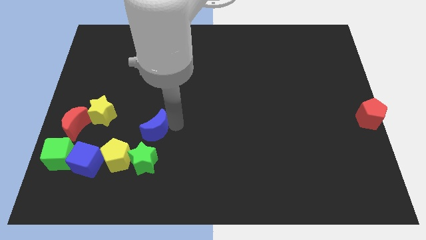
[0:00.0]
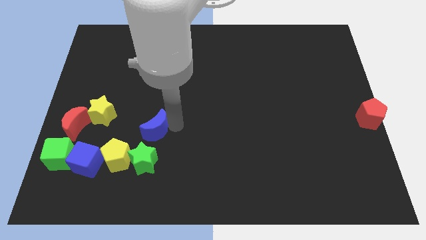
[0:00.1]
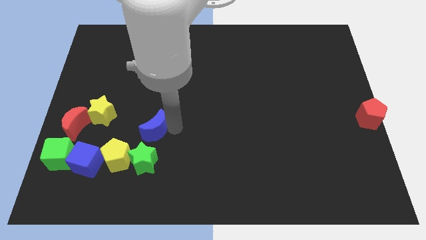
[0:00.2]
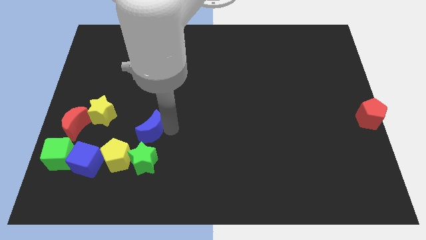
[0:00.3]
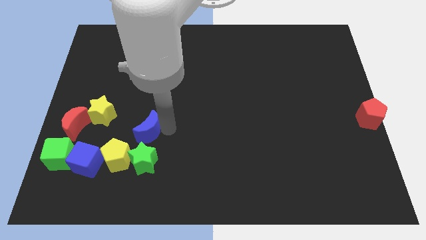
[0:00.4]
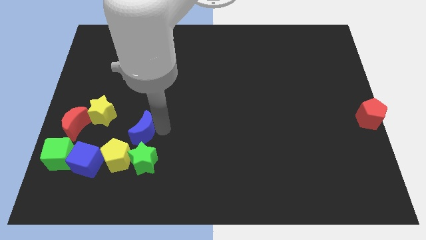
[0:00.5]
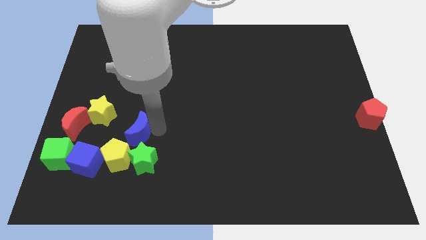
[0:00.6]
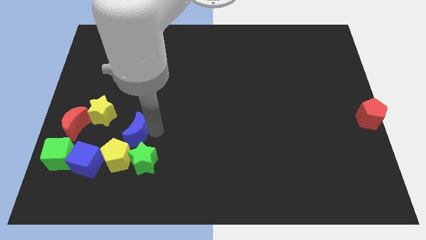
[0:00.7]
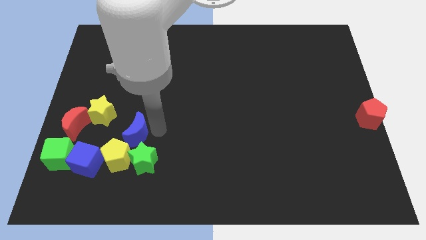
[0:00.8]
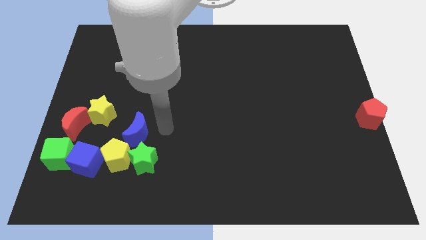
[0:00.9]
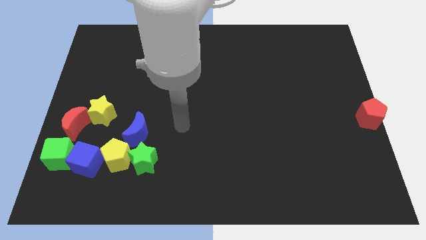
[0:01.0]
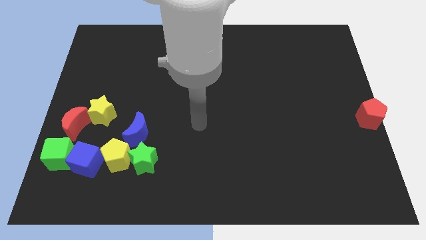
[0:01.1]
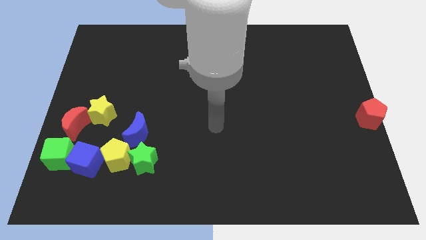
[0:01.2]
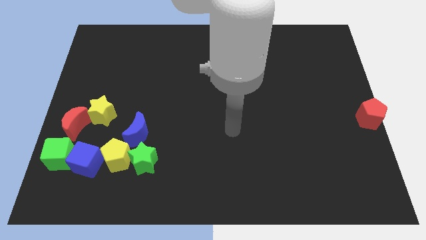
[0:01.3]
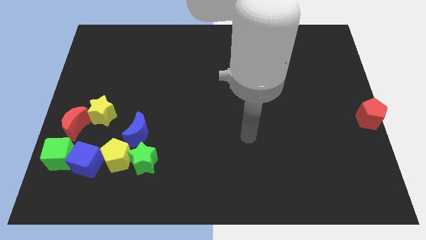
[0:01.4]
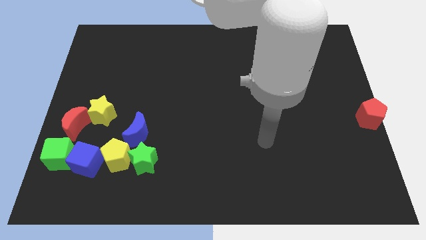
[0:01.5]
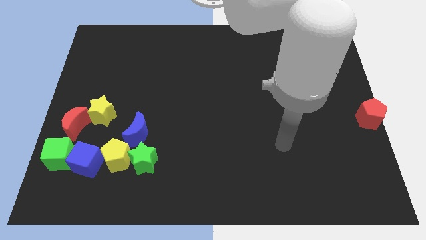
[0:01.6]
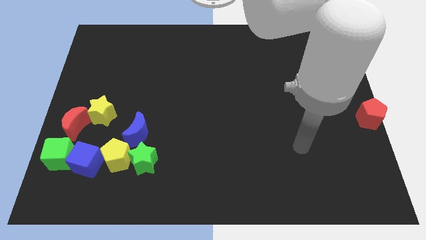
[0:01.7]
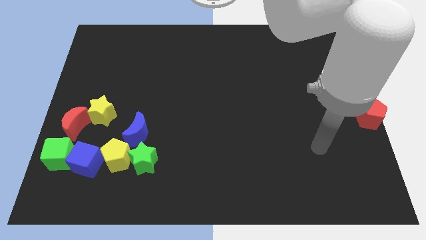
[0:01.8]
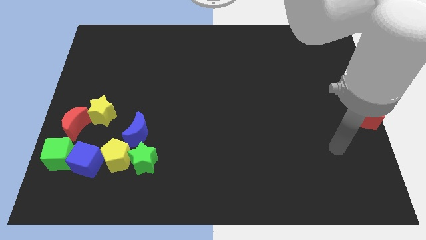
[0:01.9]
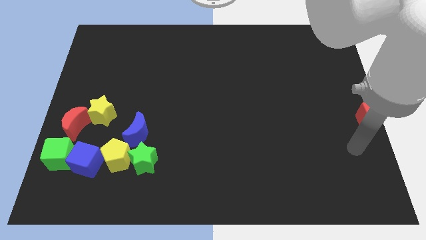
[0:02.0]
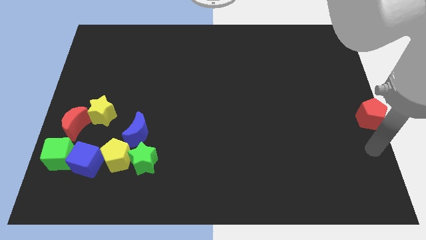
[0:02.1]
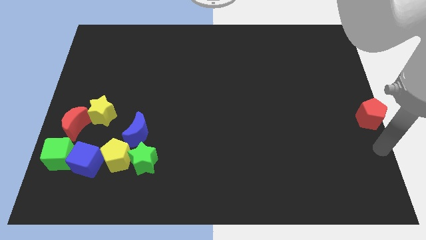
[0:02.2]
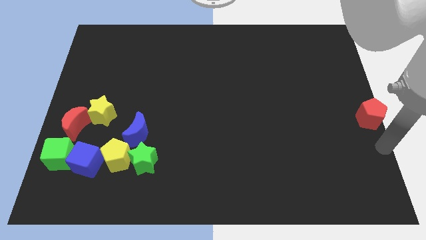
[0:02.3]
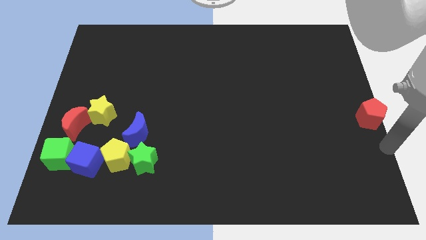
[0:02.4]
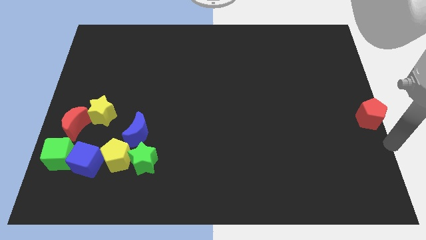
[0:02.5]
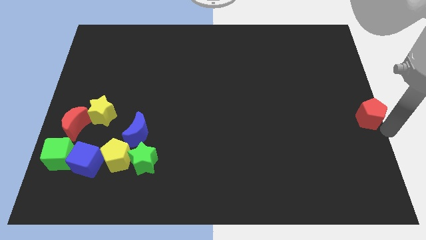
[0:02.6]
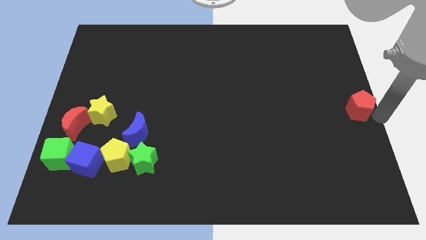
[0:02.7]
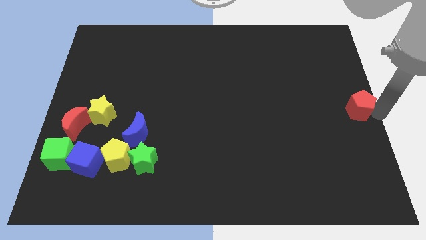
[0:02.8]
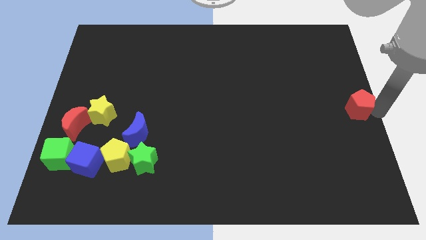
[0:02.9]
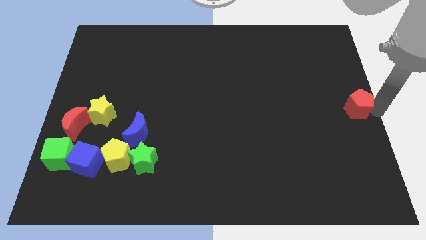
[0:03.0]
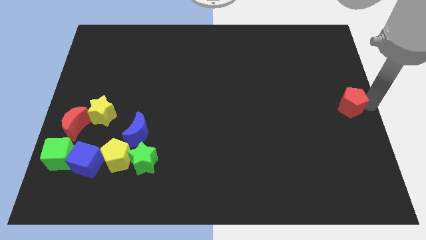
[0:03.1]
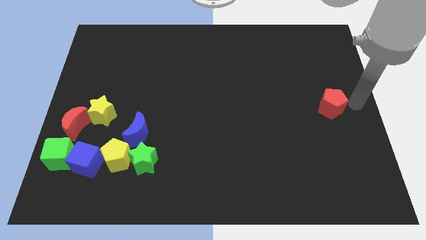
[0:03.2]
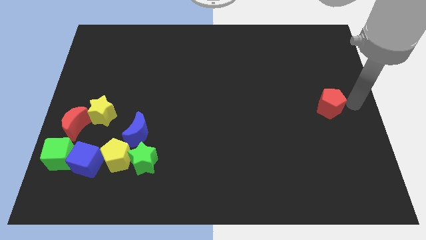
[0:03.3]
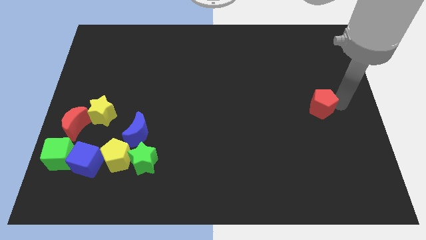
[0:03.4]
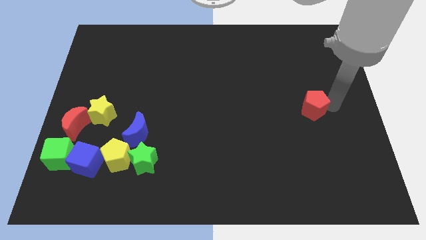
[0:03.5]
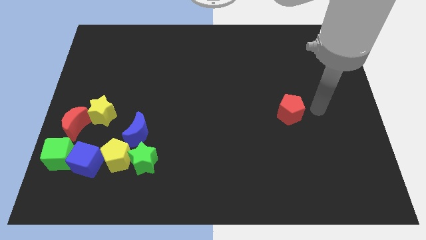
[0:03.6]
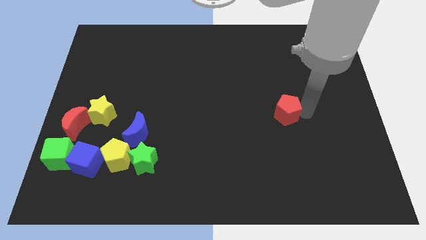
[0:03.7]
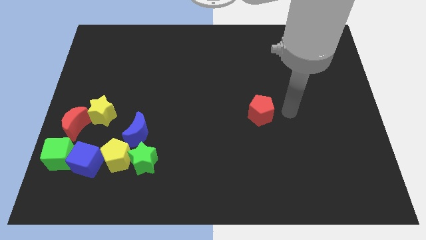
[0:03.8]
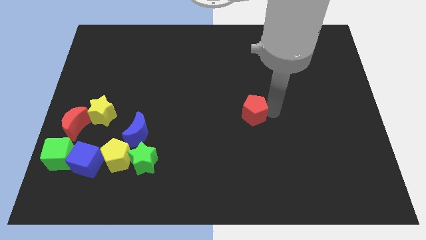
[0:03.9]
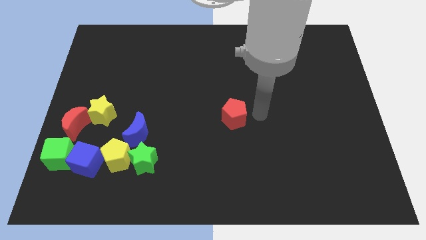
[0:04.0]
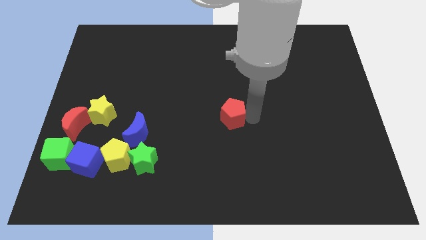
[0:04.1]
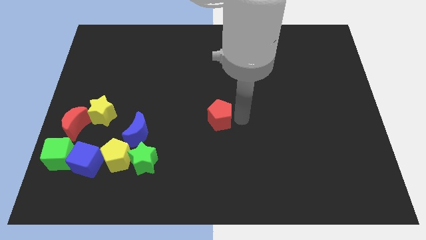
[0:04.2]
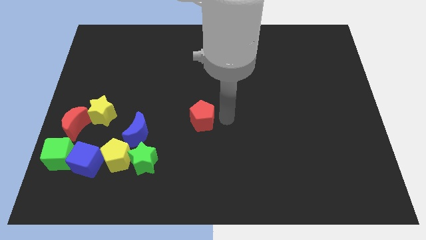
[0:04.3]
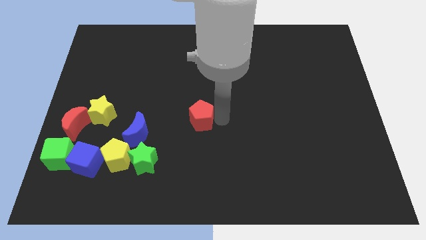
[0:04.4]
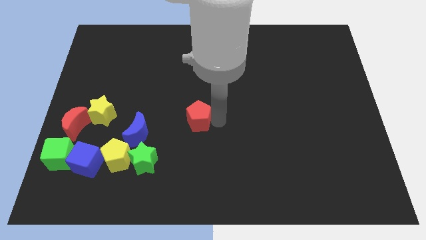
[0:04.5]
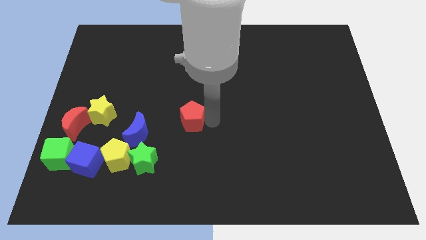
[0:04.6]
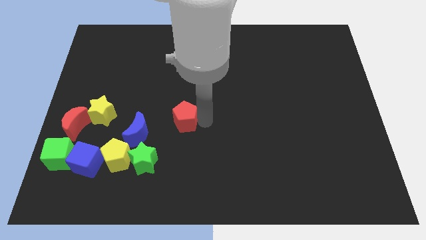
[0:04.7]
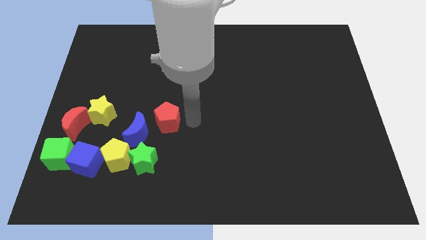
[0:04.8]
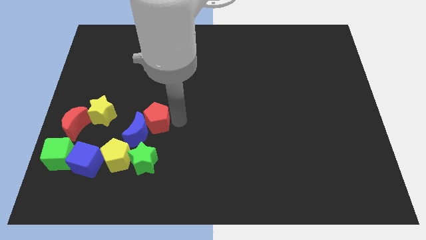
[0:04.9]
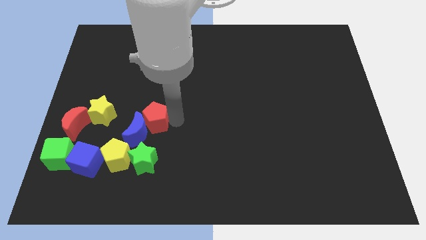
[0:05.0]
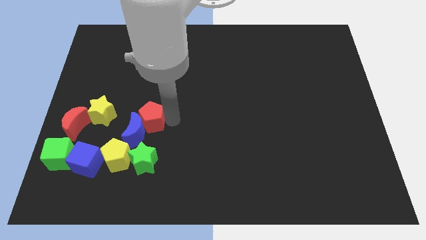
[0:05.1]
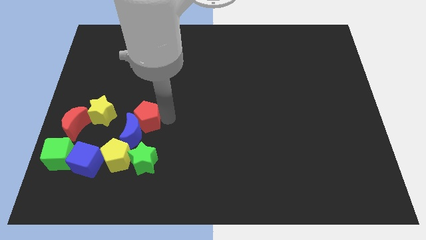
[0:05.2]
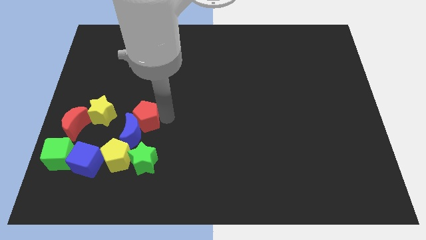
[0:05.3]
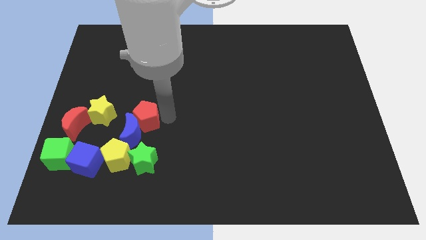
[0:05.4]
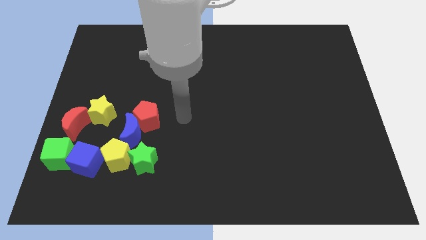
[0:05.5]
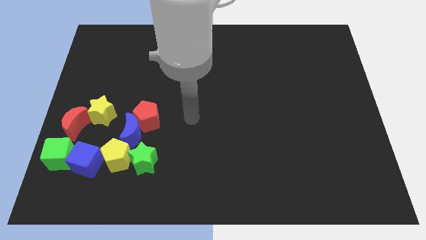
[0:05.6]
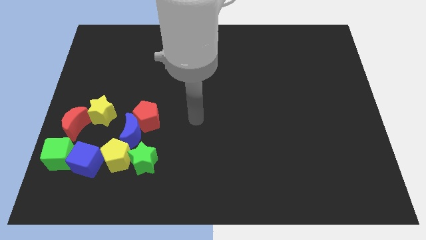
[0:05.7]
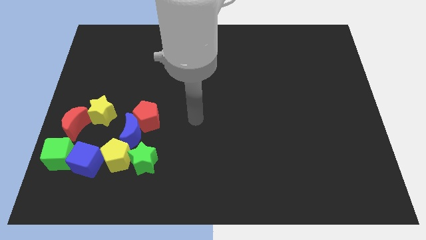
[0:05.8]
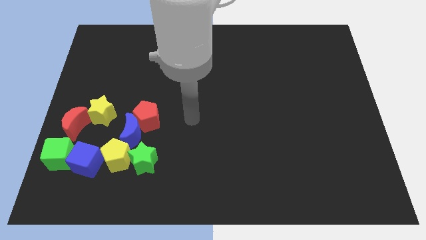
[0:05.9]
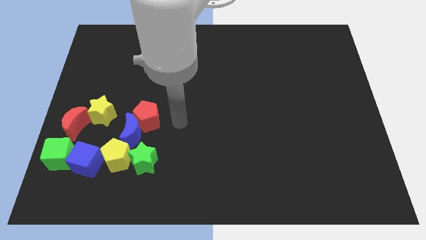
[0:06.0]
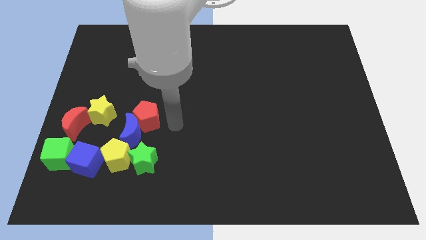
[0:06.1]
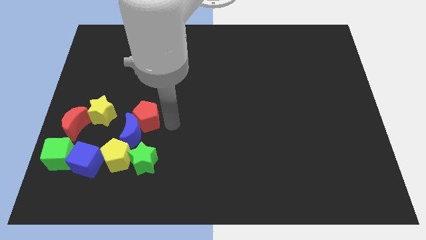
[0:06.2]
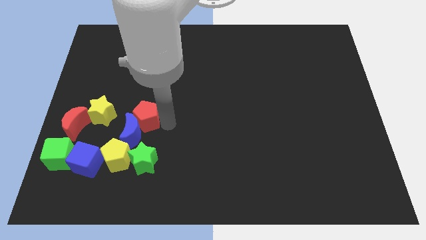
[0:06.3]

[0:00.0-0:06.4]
push the red pentagon into the blue crescent

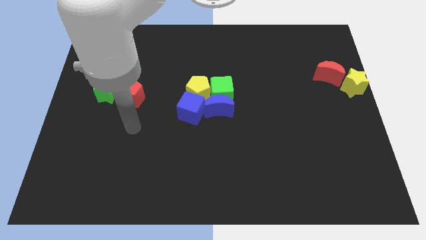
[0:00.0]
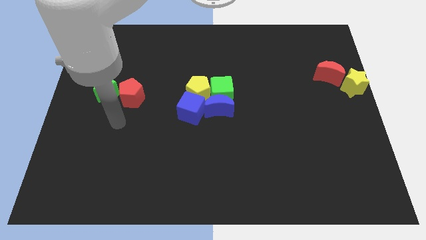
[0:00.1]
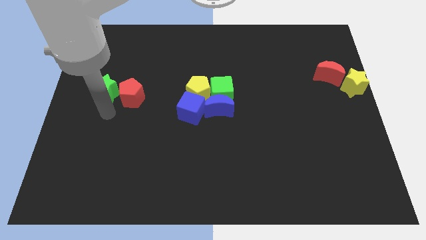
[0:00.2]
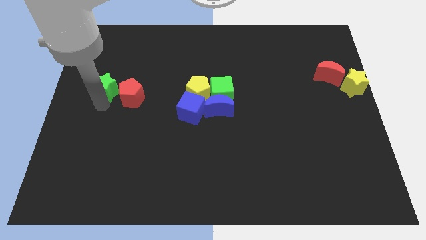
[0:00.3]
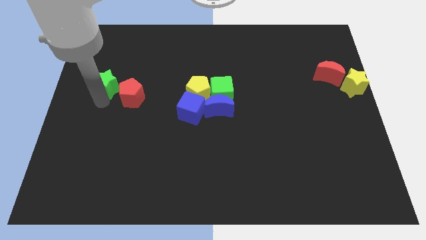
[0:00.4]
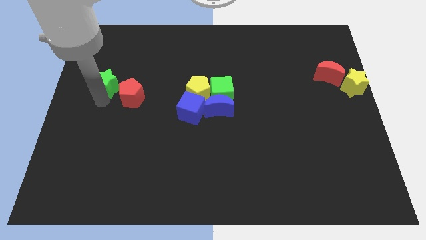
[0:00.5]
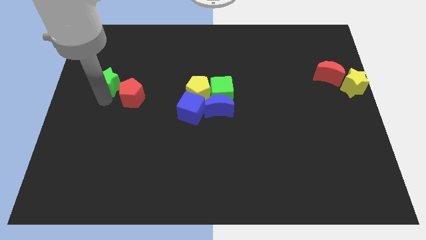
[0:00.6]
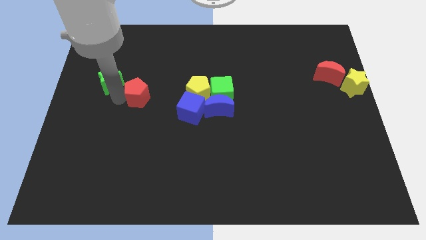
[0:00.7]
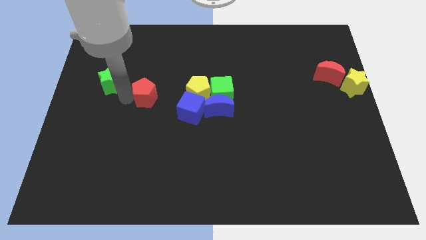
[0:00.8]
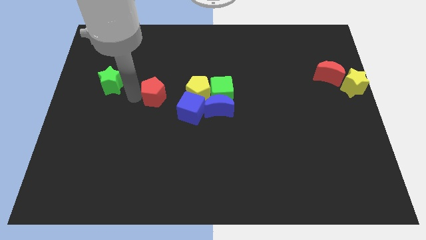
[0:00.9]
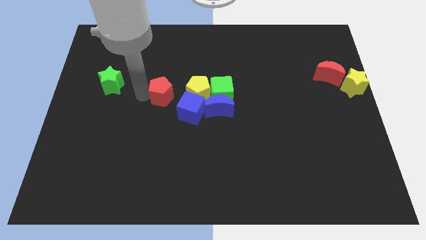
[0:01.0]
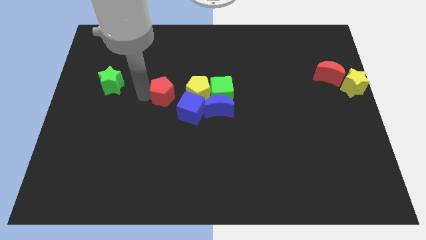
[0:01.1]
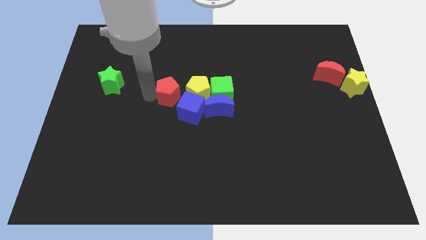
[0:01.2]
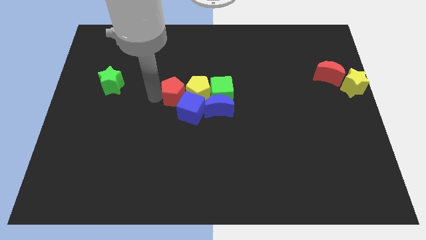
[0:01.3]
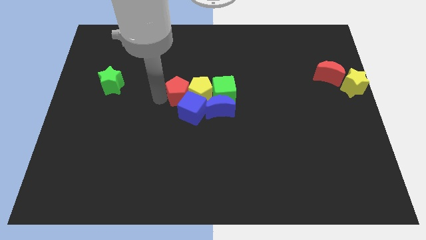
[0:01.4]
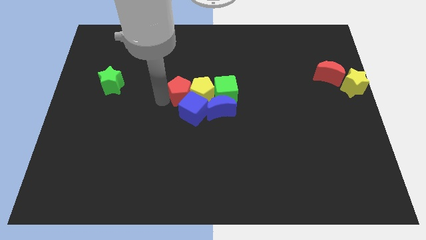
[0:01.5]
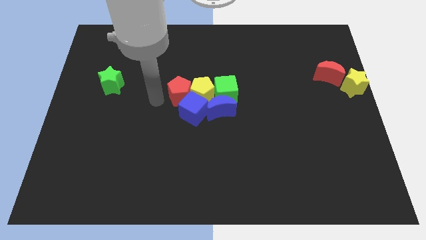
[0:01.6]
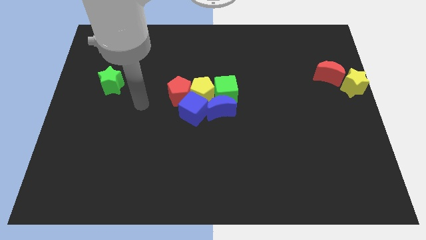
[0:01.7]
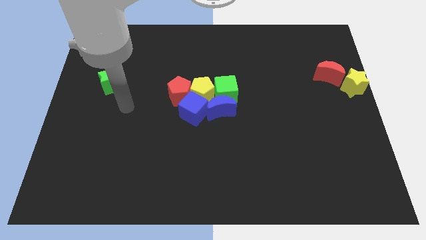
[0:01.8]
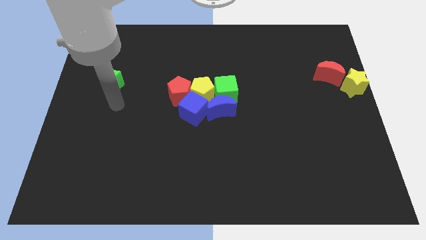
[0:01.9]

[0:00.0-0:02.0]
separate red pentagon from green star

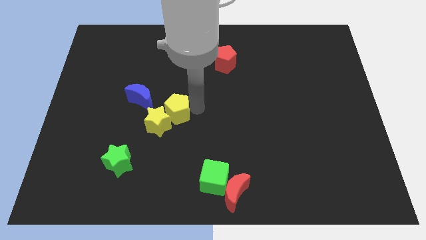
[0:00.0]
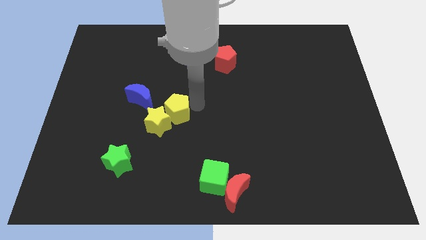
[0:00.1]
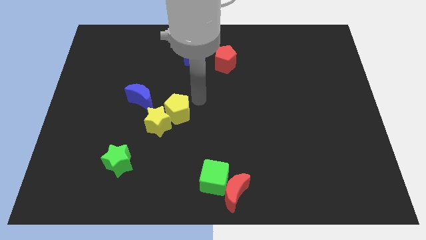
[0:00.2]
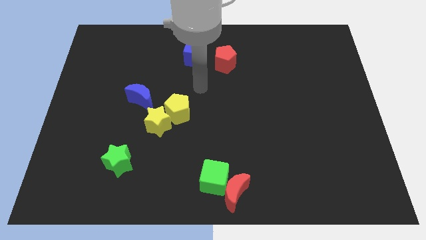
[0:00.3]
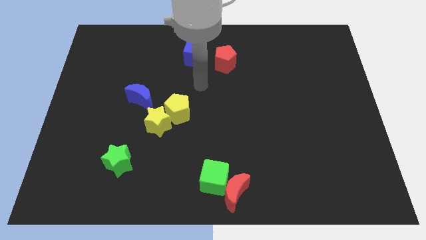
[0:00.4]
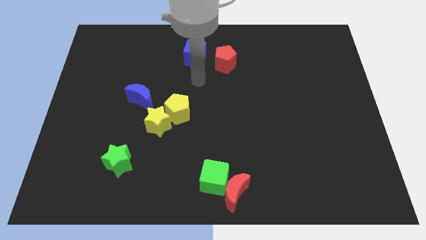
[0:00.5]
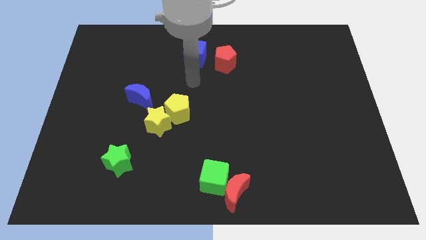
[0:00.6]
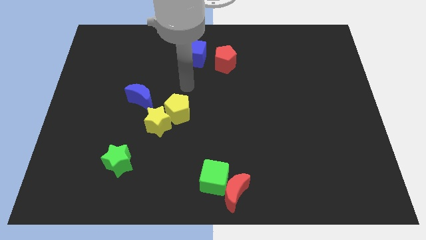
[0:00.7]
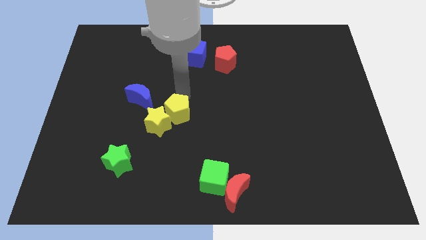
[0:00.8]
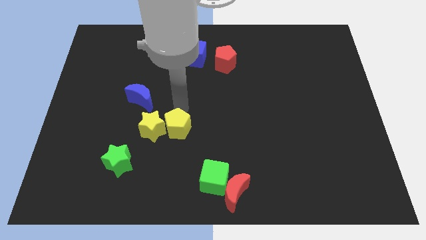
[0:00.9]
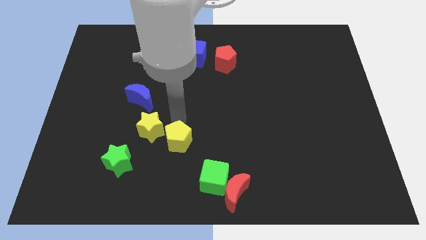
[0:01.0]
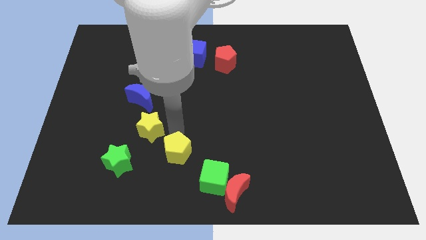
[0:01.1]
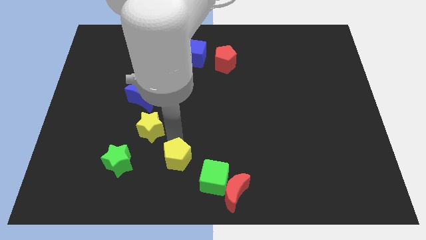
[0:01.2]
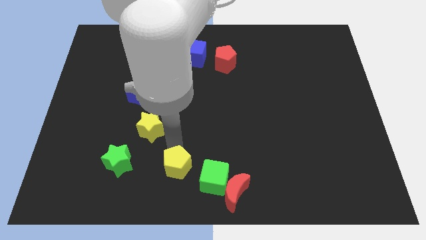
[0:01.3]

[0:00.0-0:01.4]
place the yellow pentagon towards the left side of the green cube
